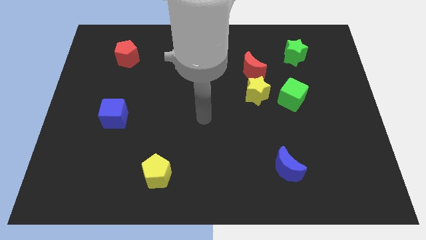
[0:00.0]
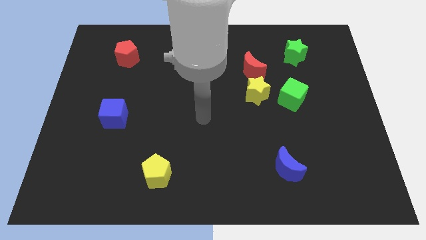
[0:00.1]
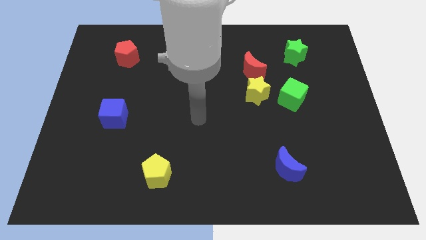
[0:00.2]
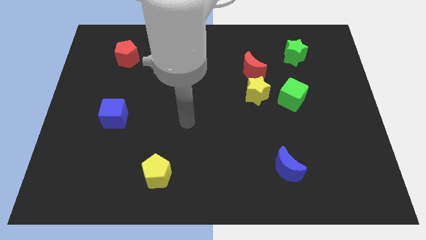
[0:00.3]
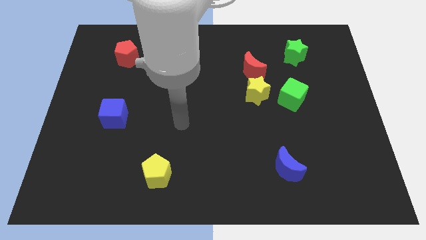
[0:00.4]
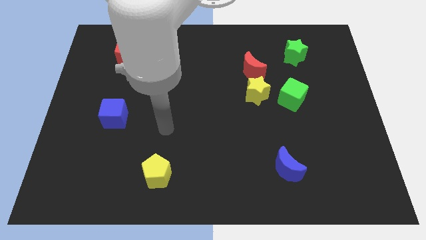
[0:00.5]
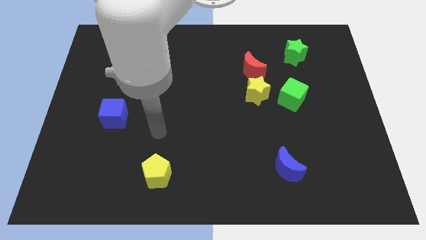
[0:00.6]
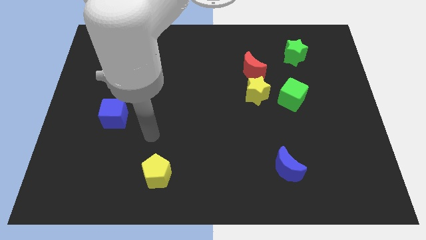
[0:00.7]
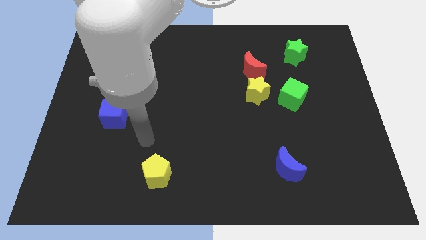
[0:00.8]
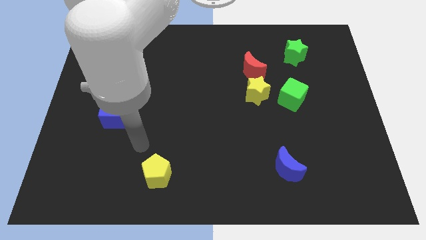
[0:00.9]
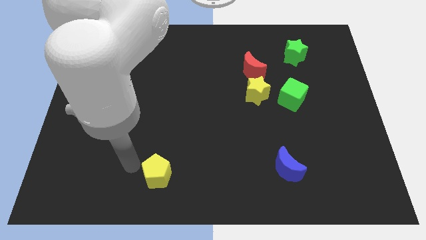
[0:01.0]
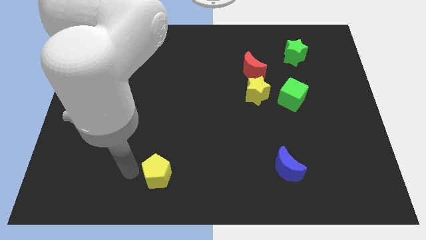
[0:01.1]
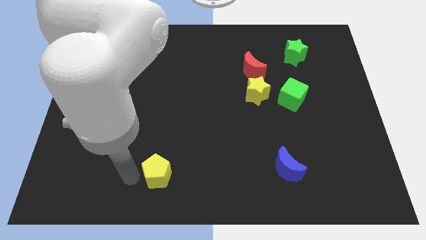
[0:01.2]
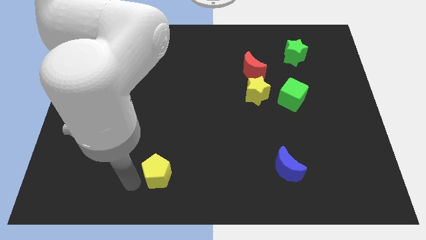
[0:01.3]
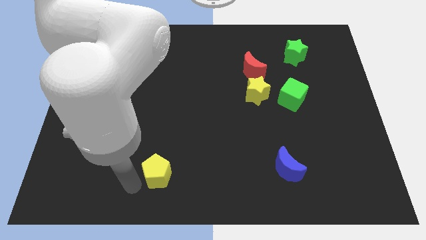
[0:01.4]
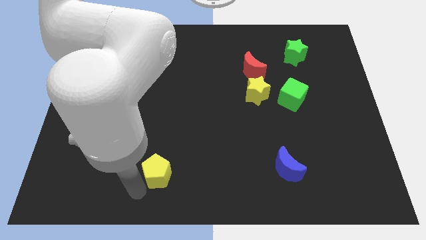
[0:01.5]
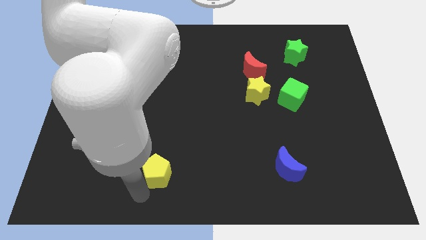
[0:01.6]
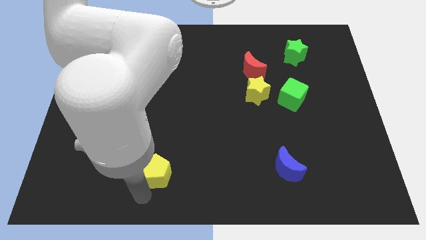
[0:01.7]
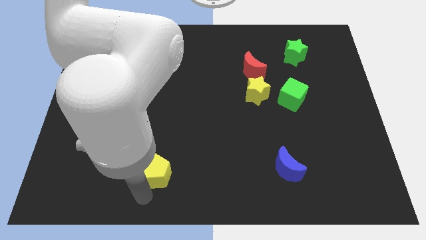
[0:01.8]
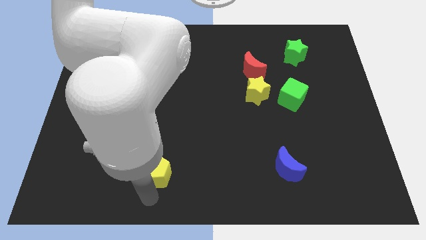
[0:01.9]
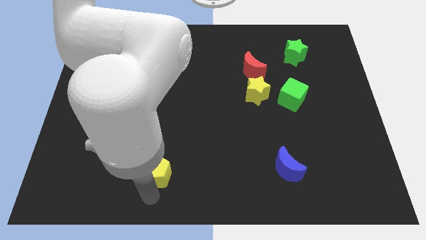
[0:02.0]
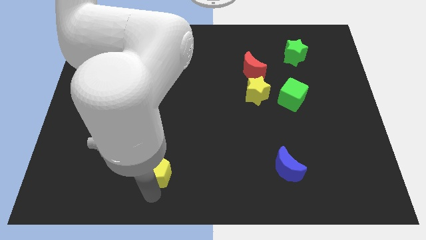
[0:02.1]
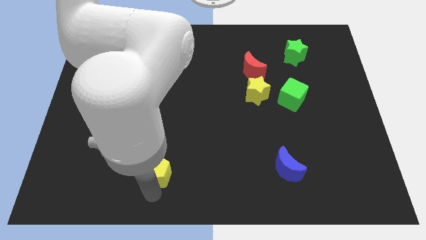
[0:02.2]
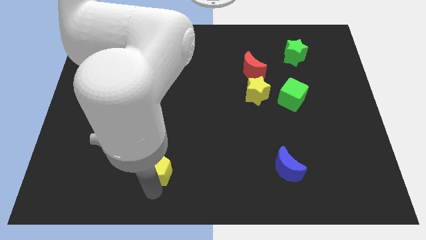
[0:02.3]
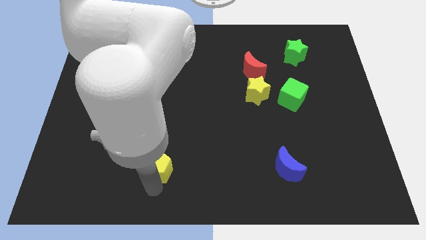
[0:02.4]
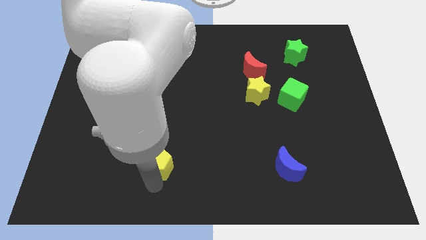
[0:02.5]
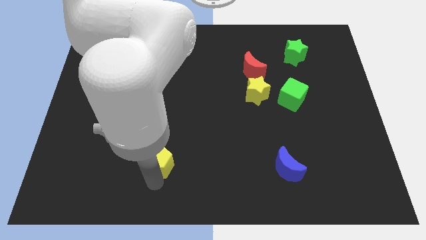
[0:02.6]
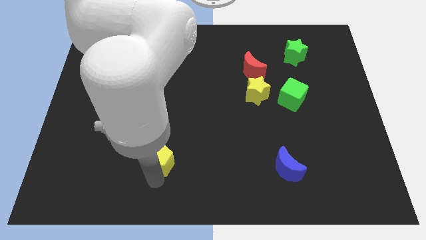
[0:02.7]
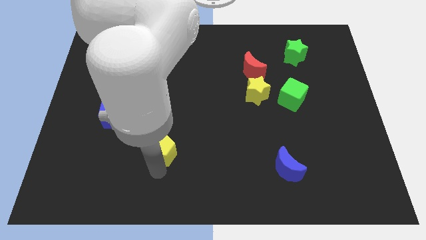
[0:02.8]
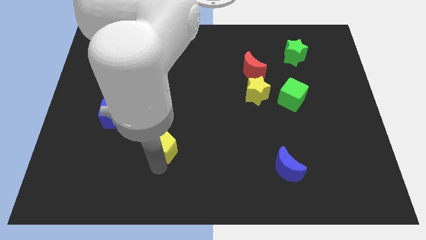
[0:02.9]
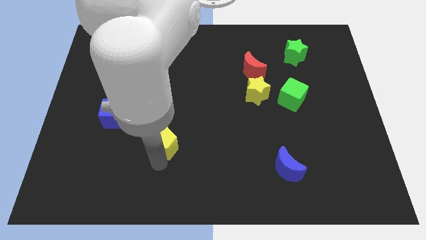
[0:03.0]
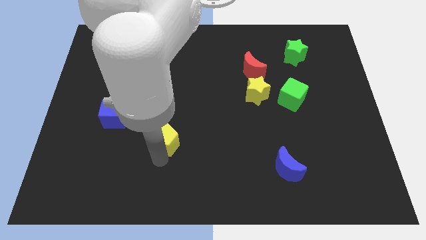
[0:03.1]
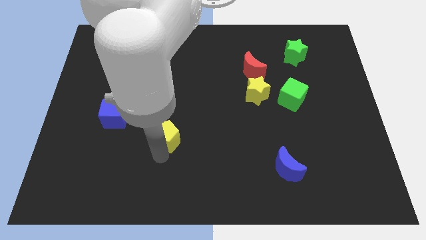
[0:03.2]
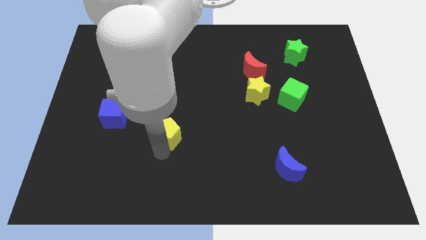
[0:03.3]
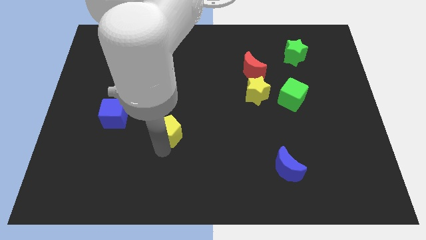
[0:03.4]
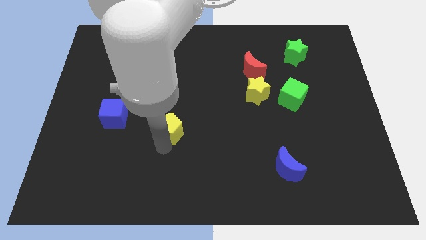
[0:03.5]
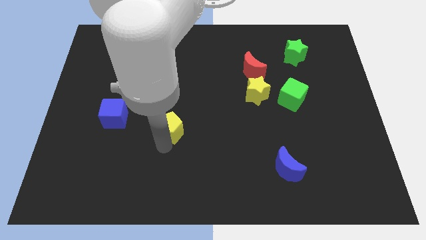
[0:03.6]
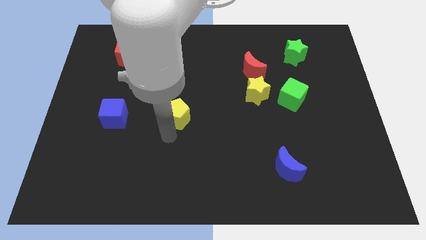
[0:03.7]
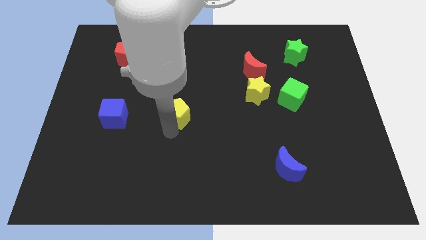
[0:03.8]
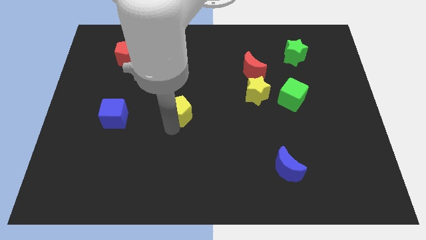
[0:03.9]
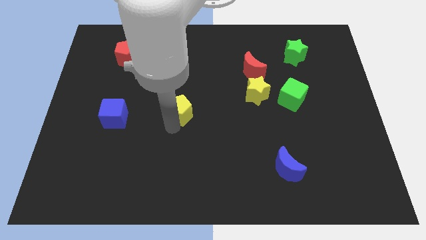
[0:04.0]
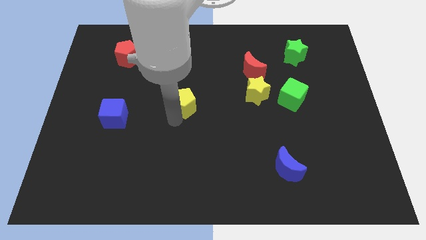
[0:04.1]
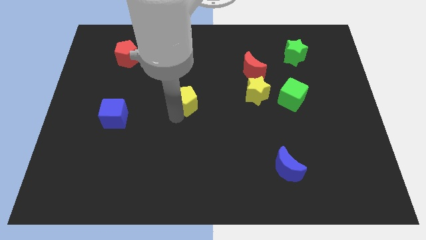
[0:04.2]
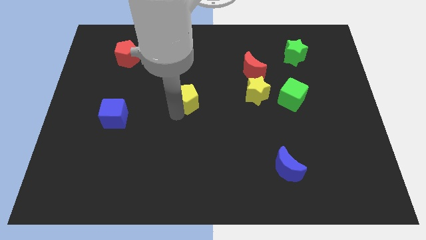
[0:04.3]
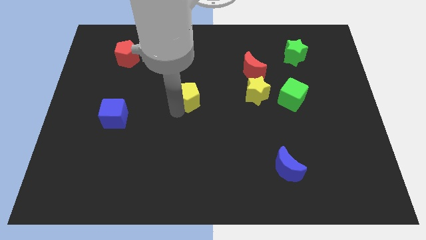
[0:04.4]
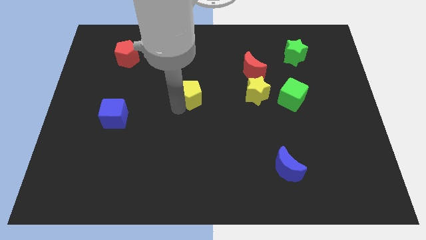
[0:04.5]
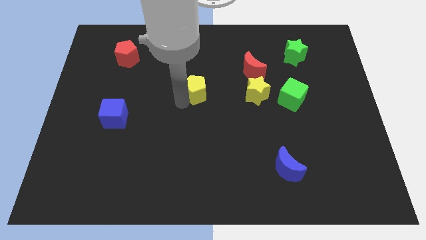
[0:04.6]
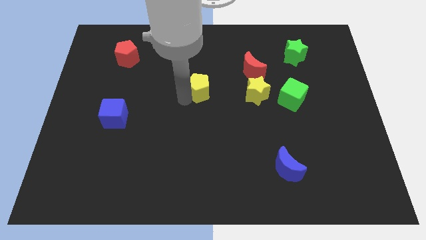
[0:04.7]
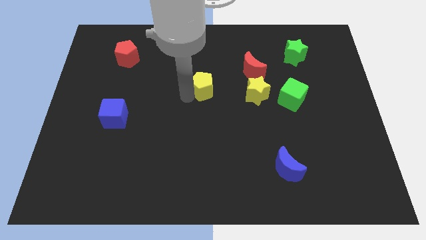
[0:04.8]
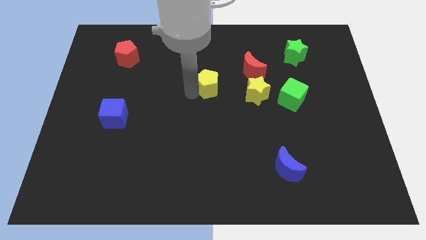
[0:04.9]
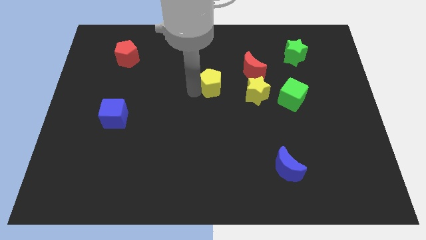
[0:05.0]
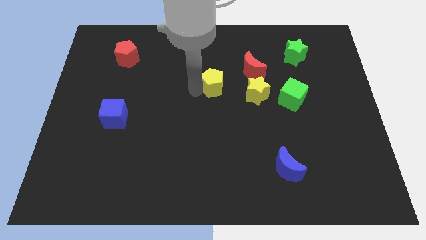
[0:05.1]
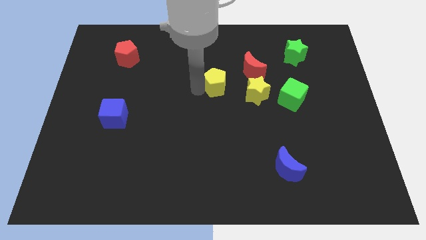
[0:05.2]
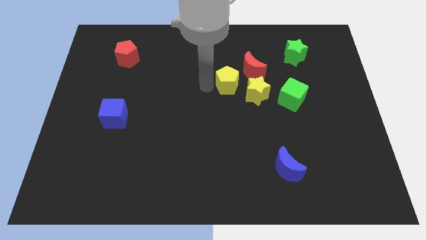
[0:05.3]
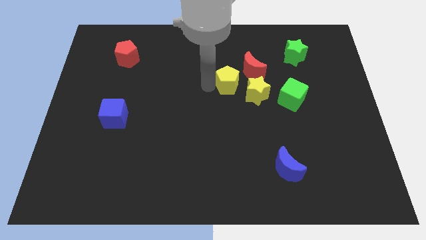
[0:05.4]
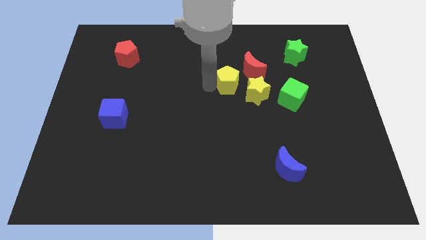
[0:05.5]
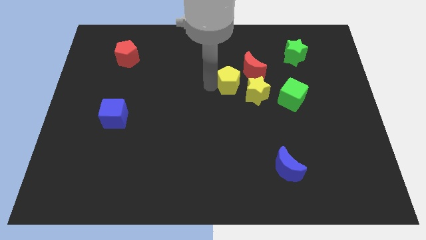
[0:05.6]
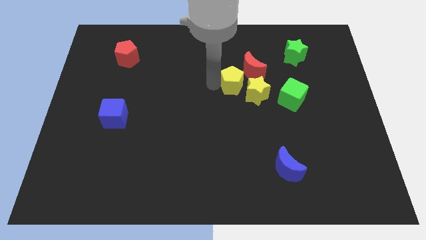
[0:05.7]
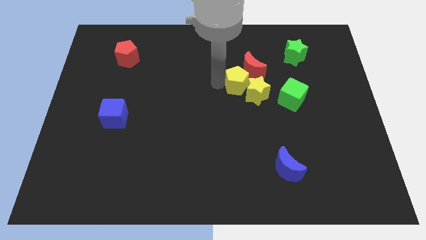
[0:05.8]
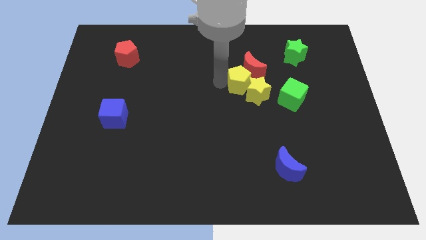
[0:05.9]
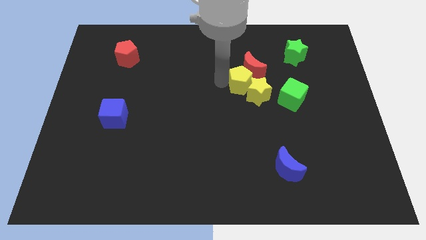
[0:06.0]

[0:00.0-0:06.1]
put the yellow pentagon next to the red moon

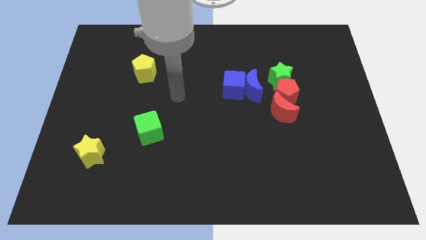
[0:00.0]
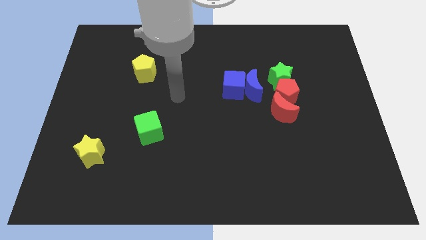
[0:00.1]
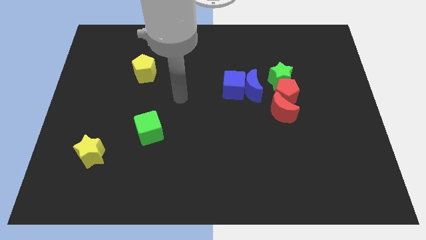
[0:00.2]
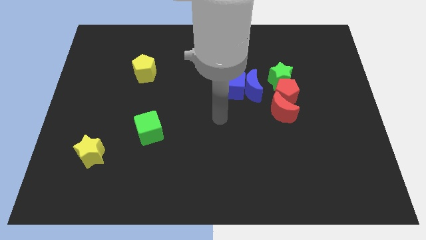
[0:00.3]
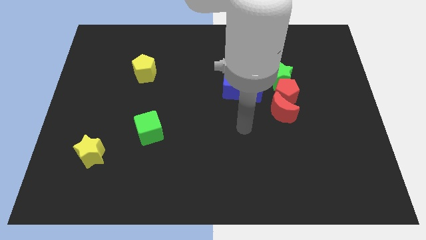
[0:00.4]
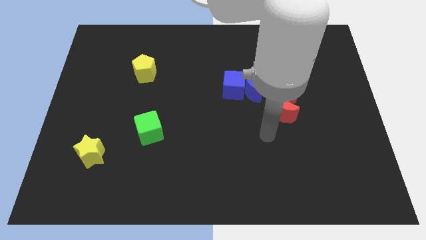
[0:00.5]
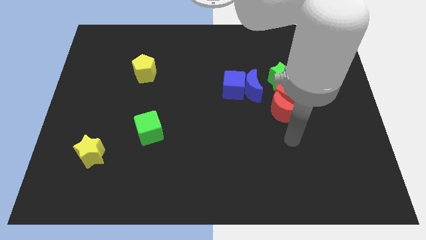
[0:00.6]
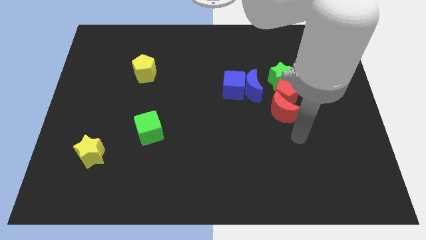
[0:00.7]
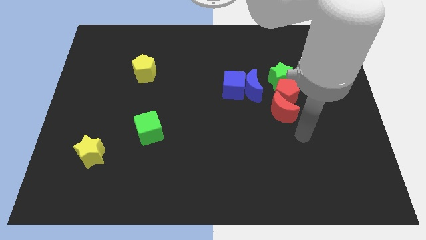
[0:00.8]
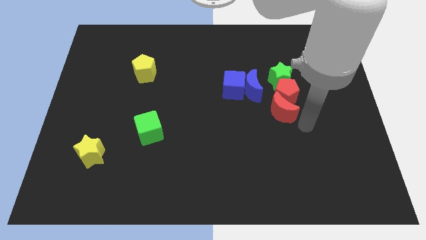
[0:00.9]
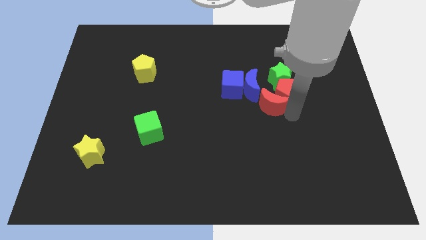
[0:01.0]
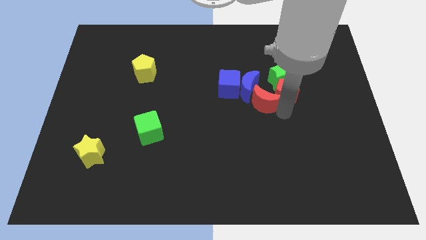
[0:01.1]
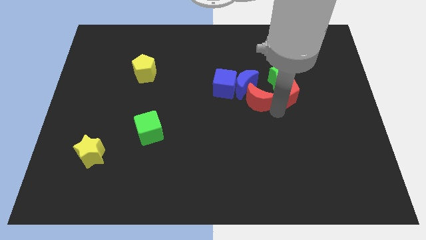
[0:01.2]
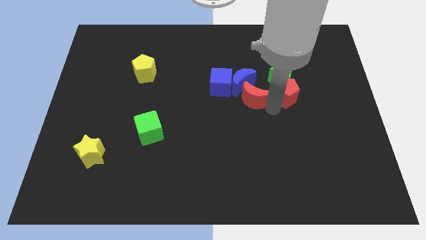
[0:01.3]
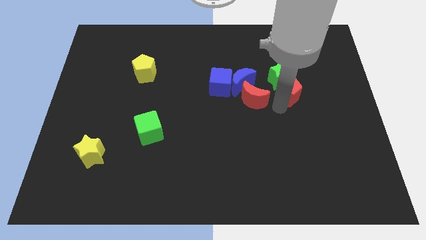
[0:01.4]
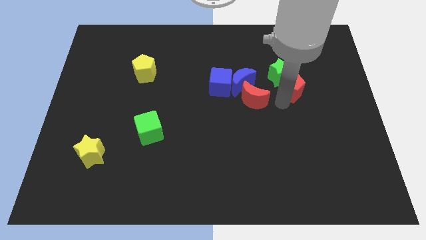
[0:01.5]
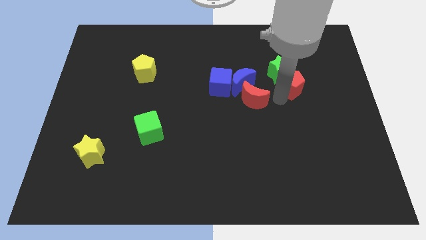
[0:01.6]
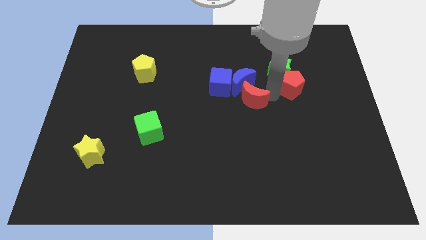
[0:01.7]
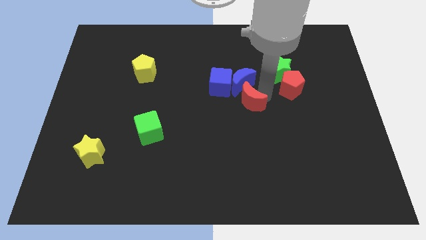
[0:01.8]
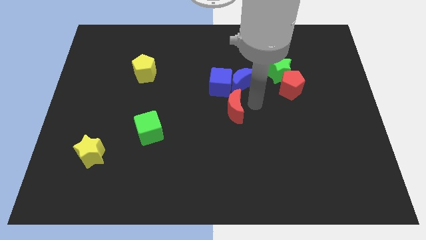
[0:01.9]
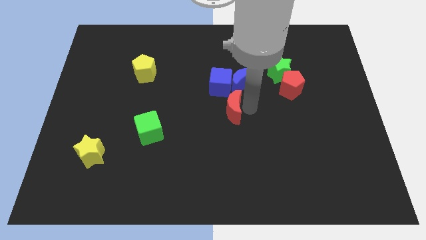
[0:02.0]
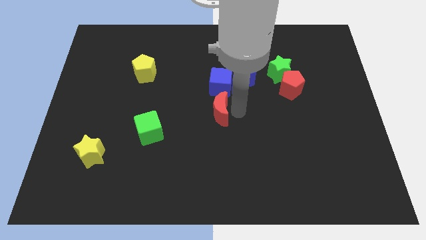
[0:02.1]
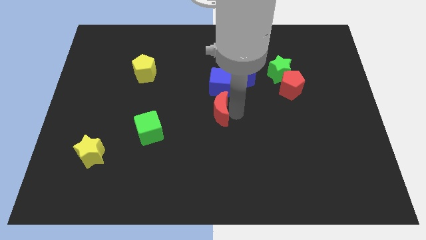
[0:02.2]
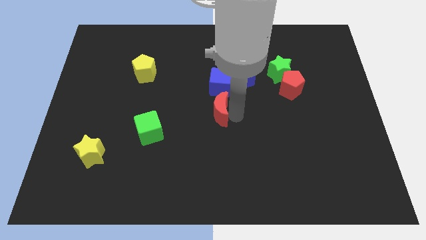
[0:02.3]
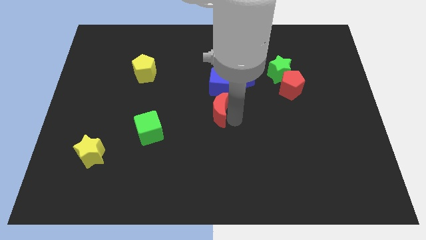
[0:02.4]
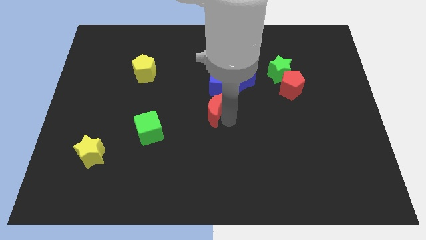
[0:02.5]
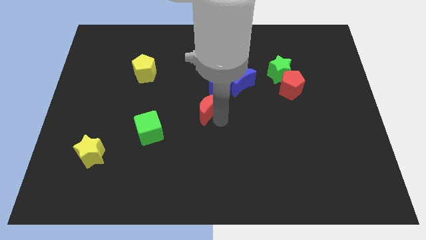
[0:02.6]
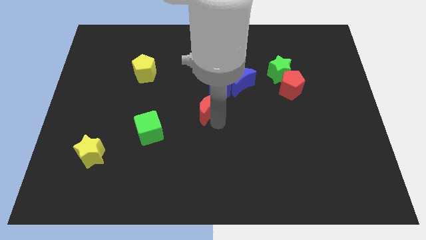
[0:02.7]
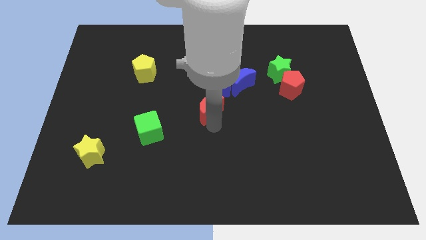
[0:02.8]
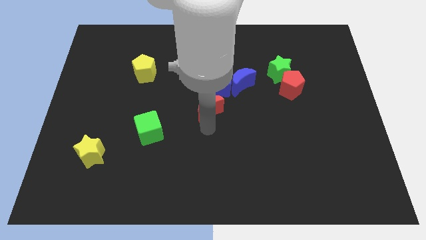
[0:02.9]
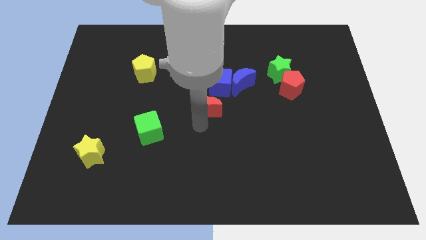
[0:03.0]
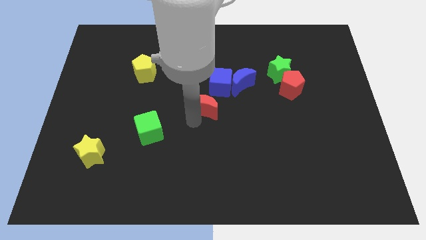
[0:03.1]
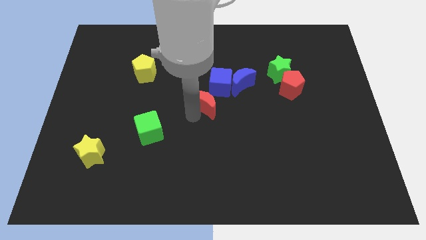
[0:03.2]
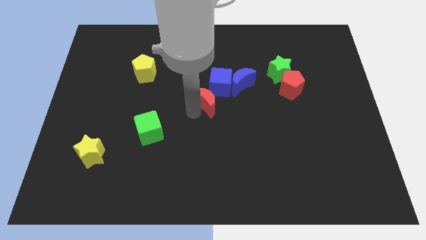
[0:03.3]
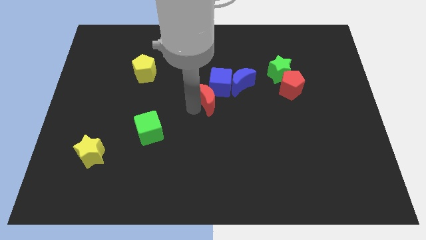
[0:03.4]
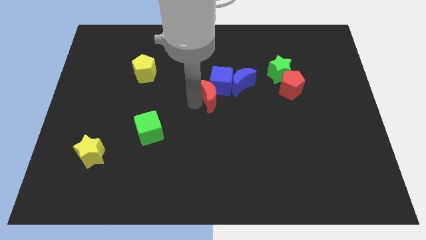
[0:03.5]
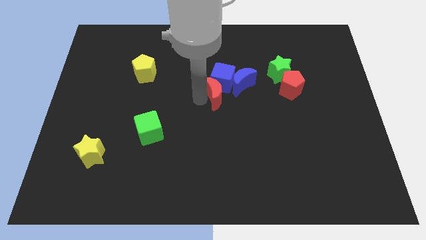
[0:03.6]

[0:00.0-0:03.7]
slide the red moon close to the blue cube
